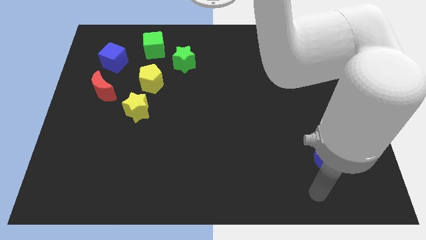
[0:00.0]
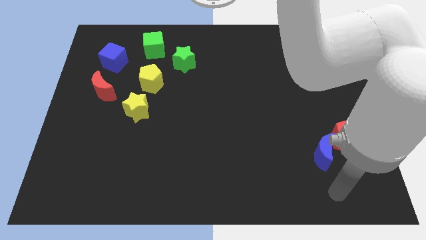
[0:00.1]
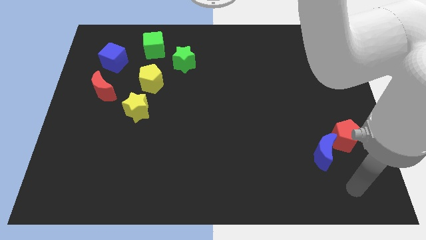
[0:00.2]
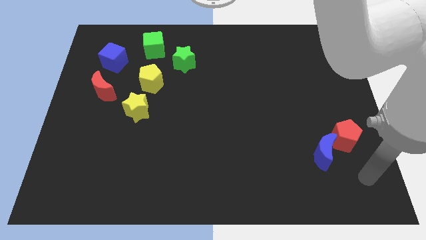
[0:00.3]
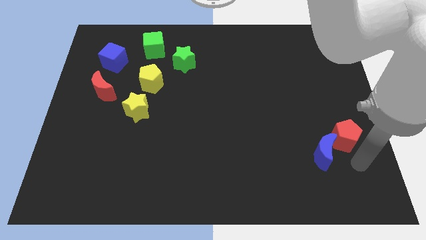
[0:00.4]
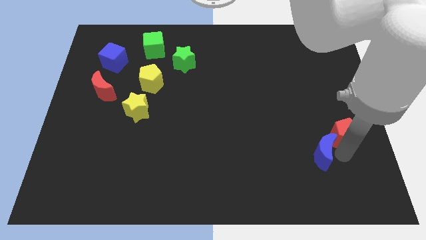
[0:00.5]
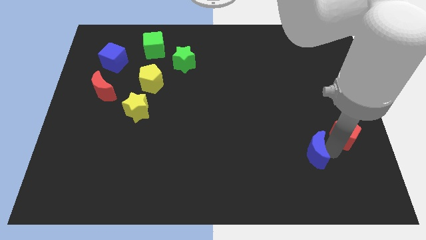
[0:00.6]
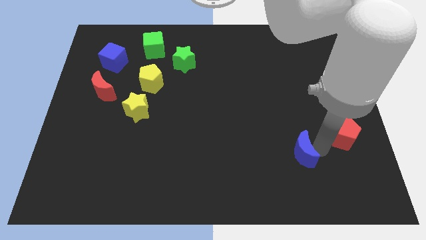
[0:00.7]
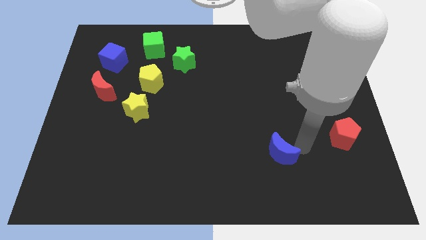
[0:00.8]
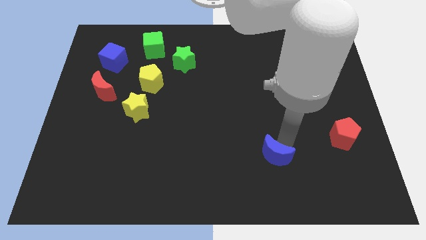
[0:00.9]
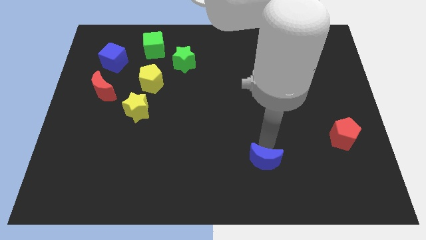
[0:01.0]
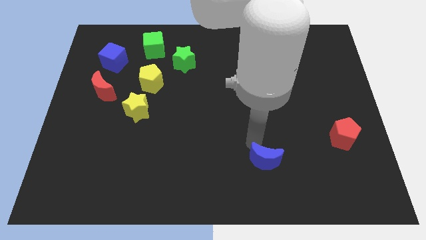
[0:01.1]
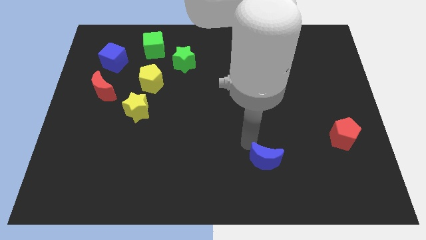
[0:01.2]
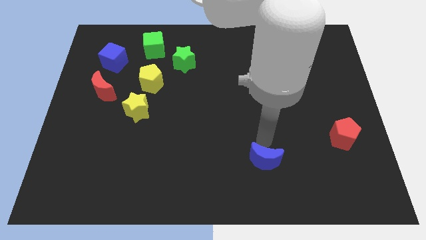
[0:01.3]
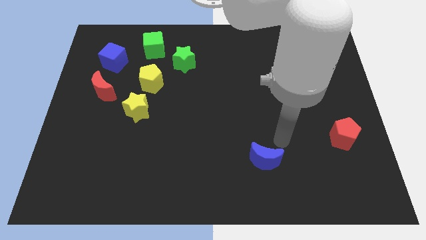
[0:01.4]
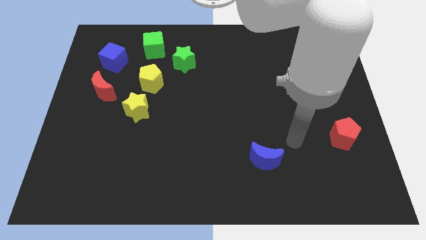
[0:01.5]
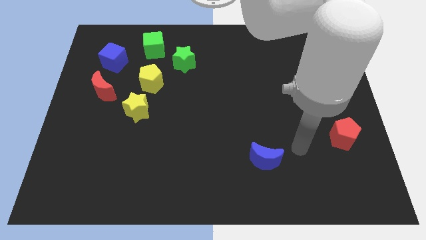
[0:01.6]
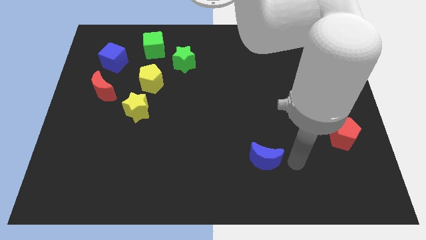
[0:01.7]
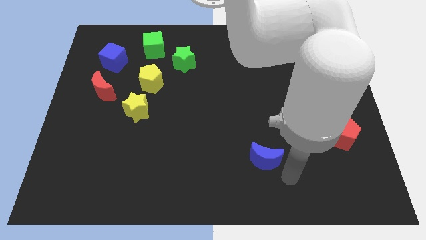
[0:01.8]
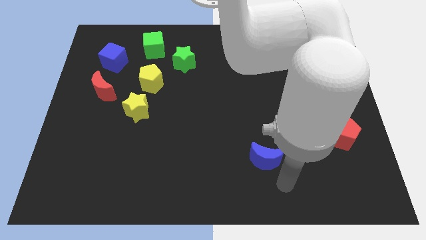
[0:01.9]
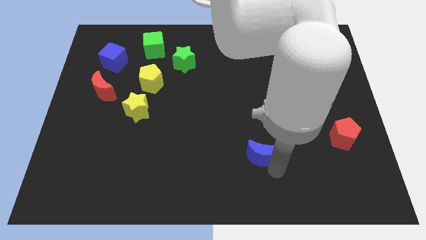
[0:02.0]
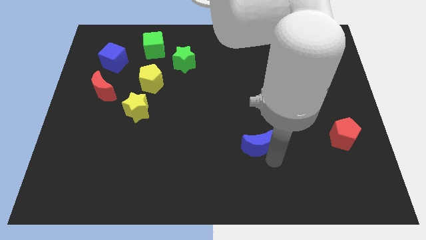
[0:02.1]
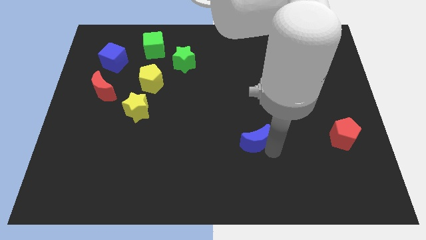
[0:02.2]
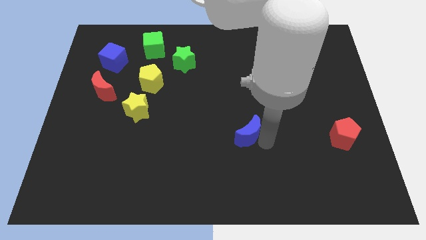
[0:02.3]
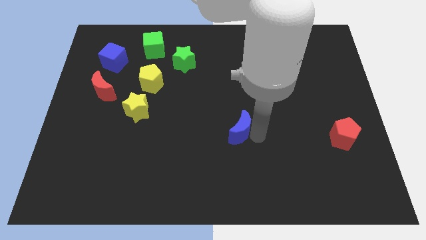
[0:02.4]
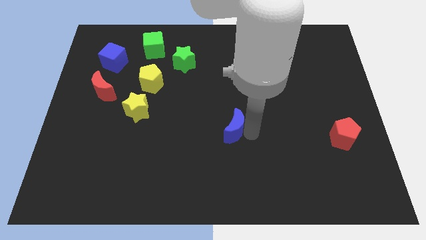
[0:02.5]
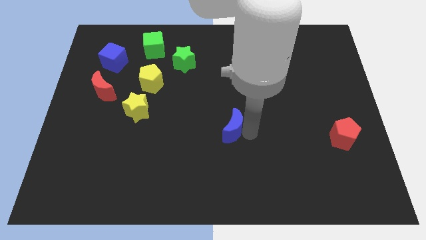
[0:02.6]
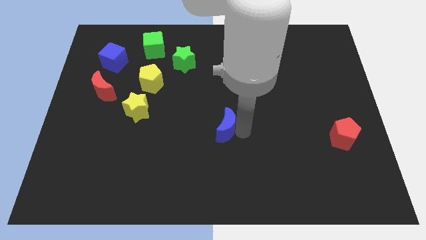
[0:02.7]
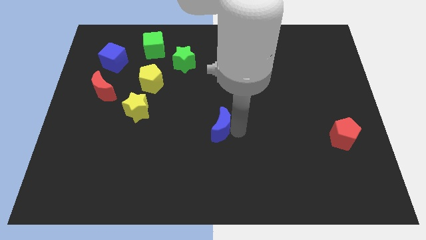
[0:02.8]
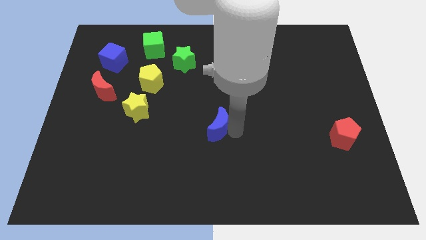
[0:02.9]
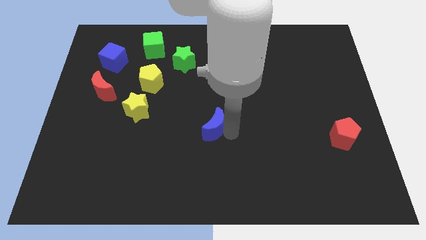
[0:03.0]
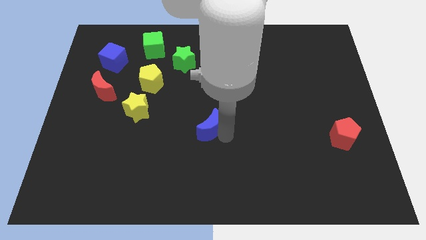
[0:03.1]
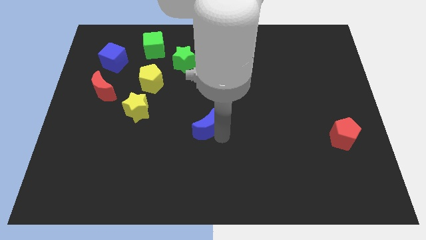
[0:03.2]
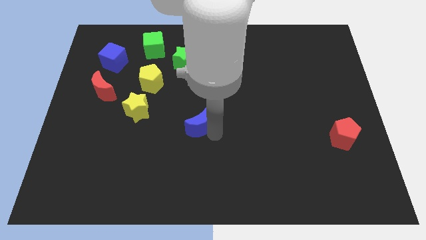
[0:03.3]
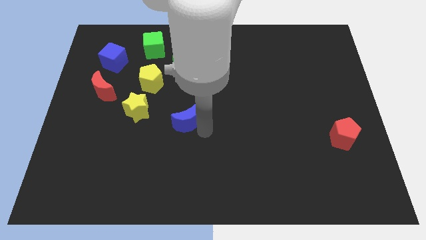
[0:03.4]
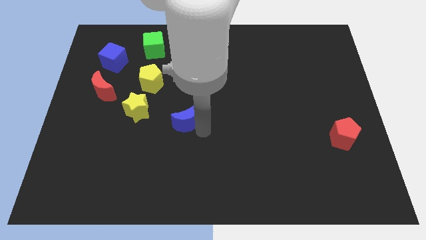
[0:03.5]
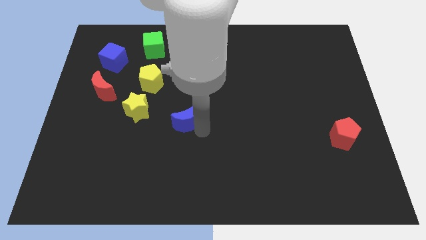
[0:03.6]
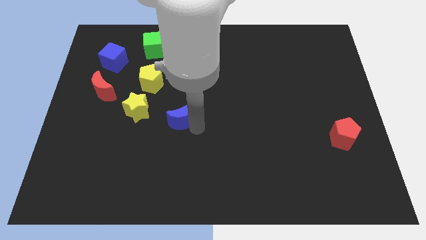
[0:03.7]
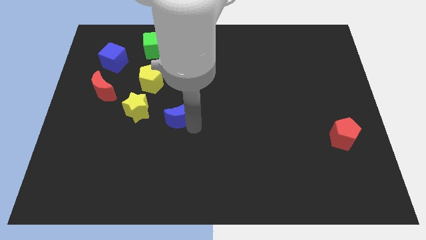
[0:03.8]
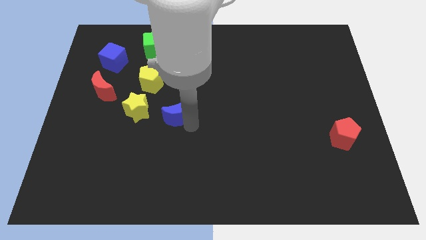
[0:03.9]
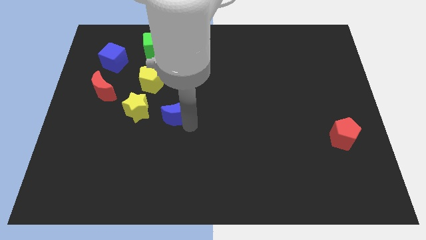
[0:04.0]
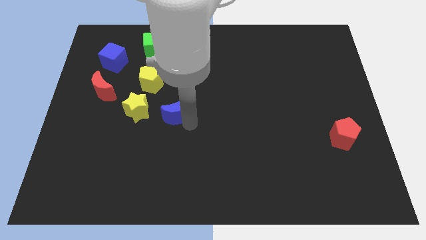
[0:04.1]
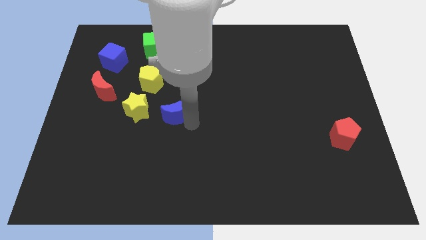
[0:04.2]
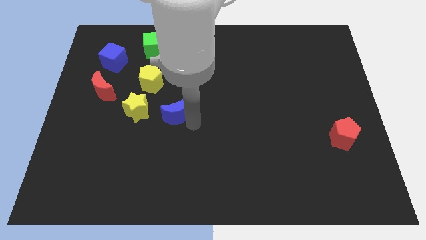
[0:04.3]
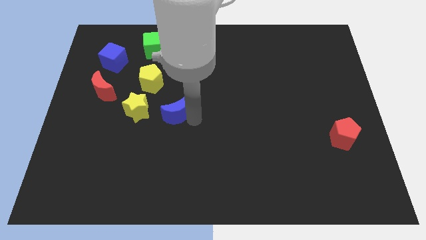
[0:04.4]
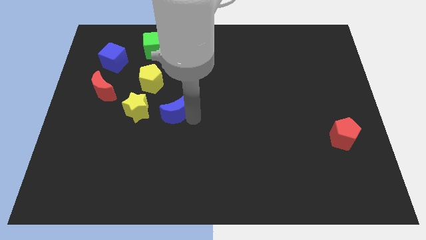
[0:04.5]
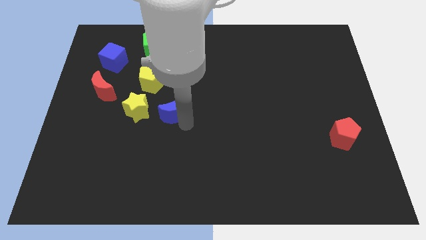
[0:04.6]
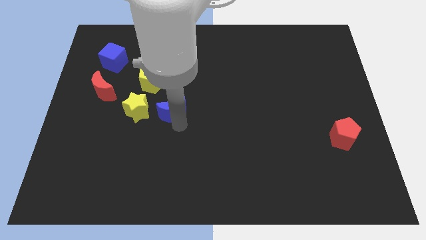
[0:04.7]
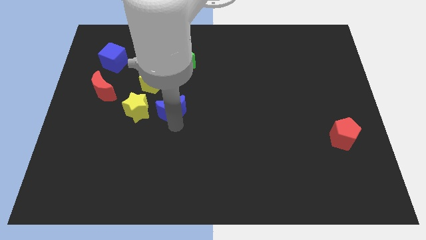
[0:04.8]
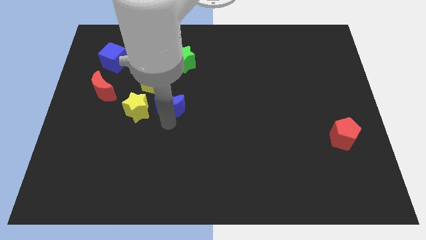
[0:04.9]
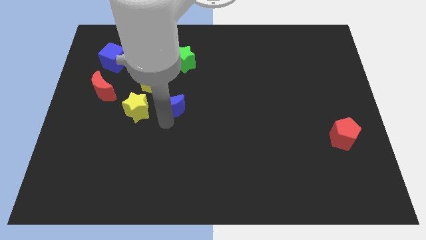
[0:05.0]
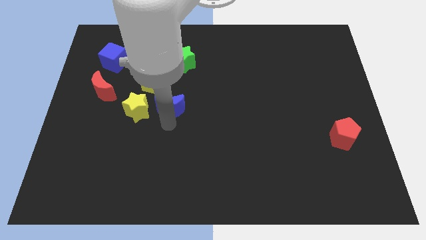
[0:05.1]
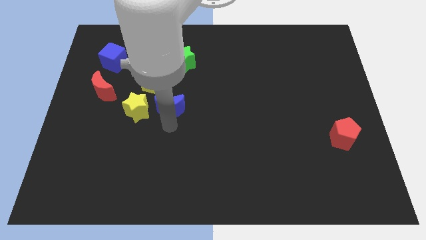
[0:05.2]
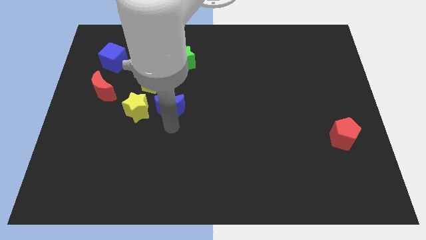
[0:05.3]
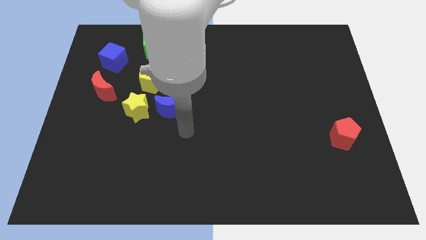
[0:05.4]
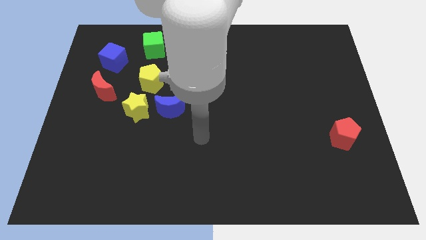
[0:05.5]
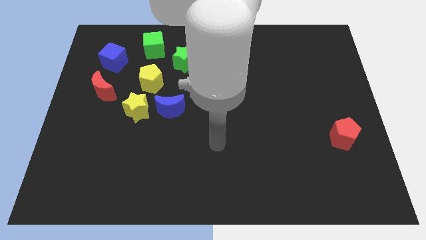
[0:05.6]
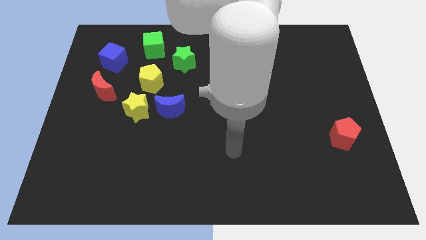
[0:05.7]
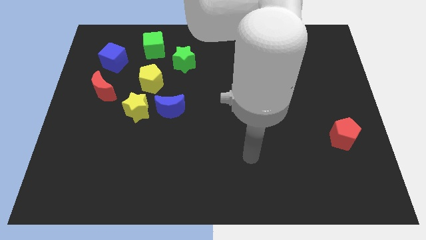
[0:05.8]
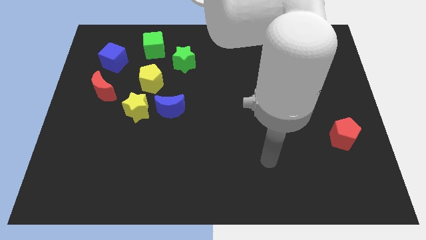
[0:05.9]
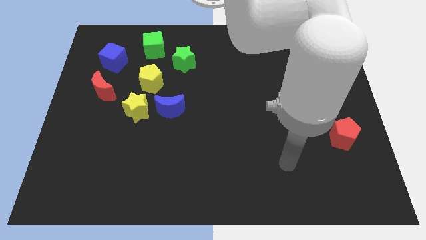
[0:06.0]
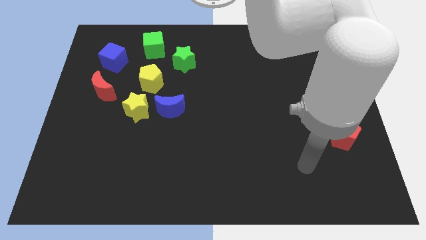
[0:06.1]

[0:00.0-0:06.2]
move blue moon to the right of yellow star

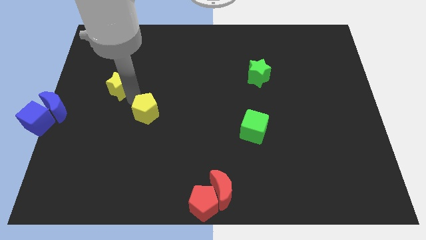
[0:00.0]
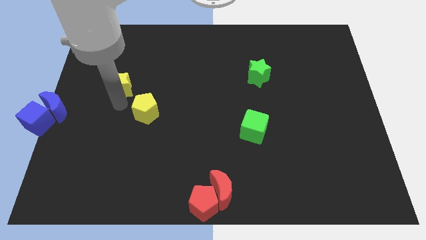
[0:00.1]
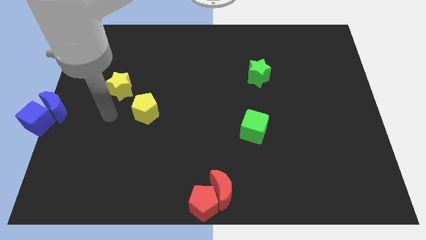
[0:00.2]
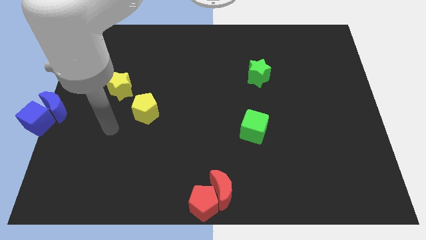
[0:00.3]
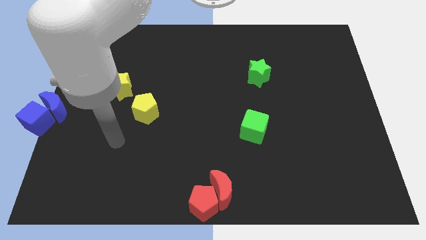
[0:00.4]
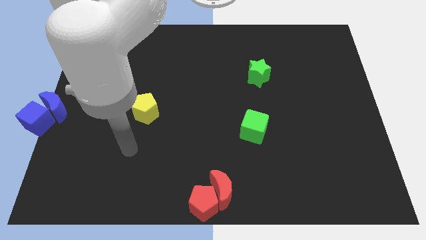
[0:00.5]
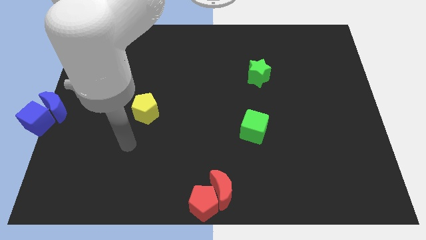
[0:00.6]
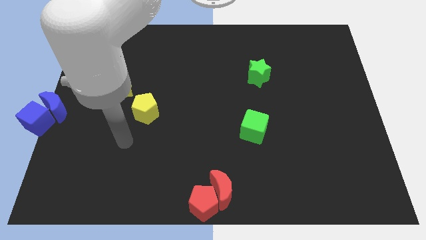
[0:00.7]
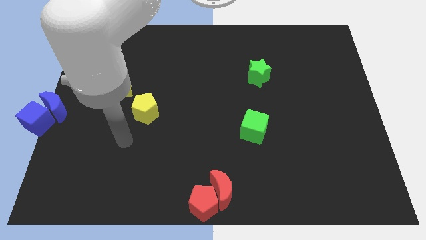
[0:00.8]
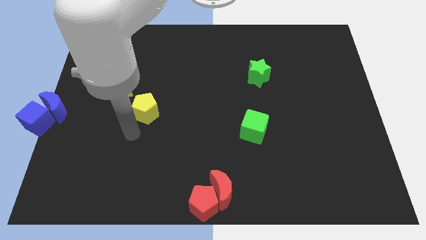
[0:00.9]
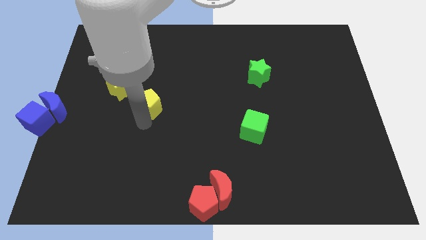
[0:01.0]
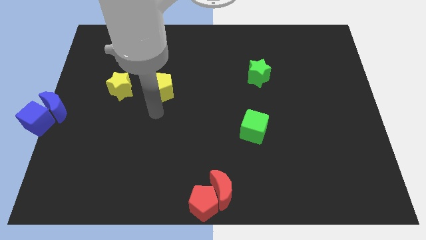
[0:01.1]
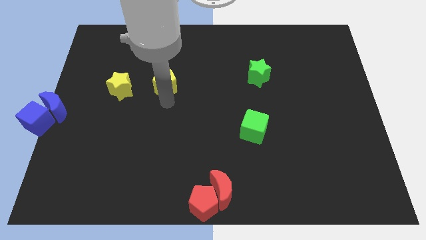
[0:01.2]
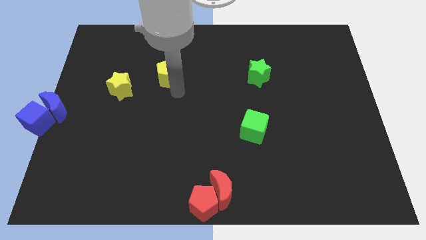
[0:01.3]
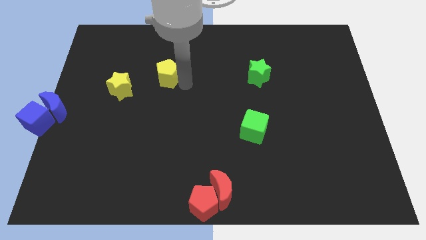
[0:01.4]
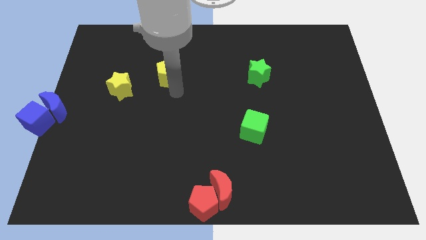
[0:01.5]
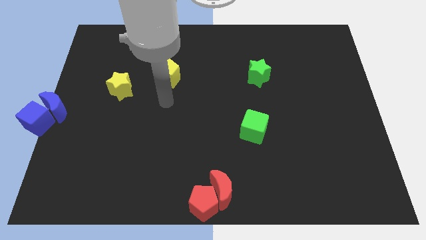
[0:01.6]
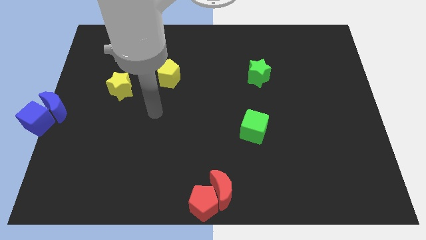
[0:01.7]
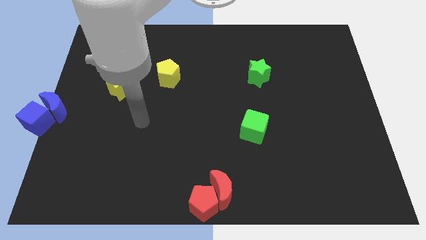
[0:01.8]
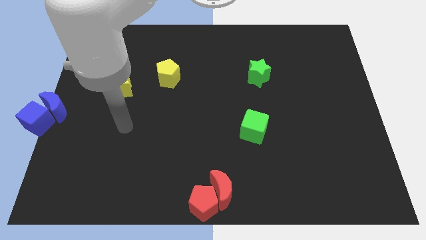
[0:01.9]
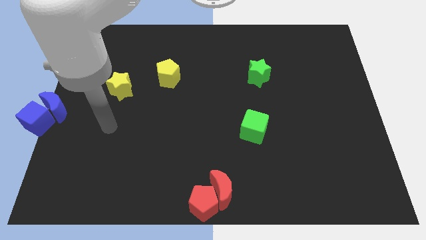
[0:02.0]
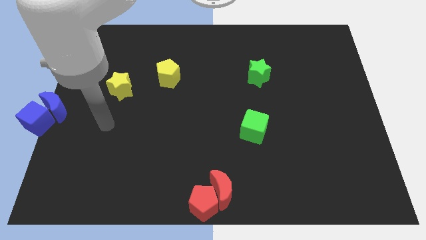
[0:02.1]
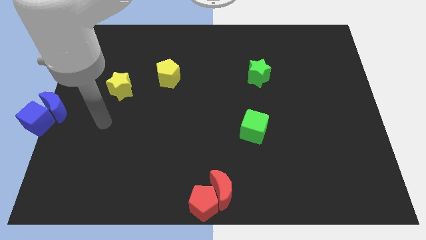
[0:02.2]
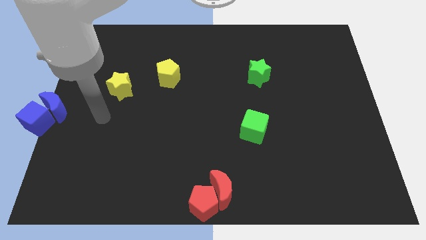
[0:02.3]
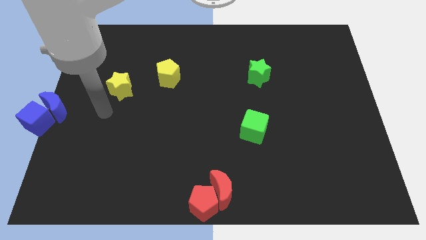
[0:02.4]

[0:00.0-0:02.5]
push the yellow pentagon to the top right of the yellow star

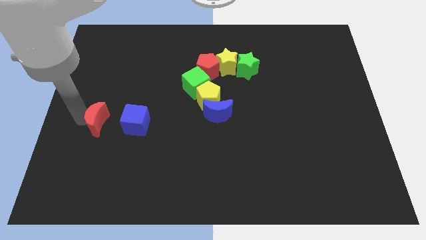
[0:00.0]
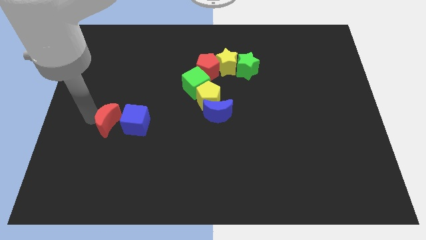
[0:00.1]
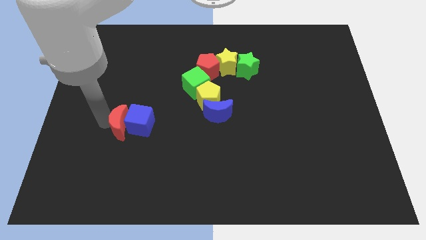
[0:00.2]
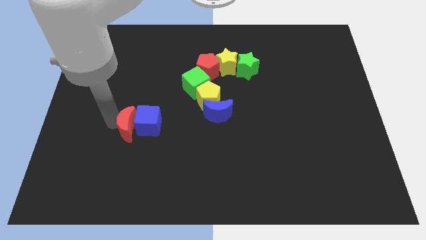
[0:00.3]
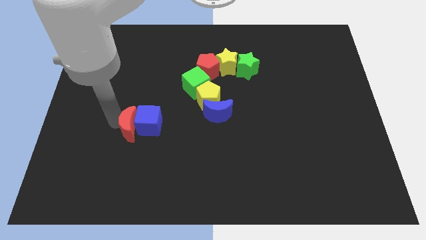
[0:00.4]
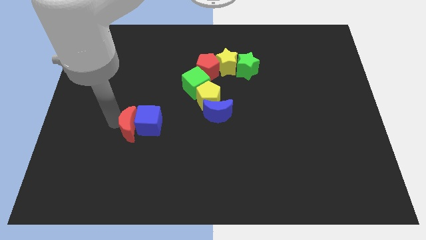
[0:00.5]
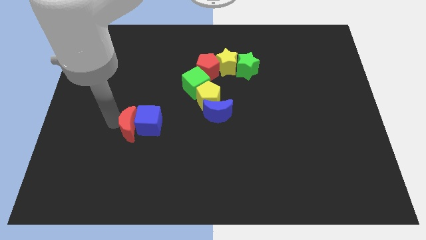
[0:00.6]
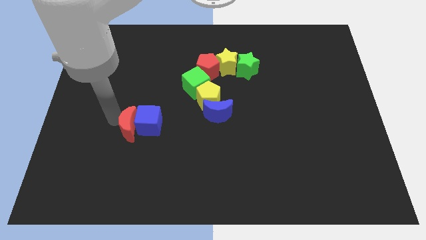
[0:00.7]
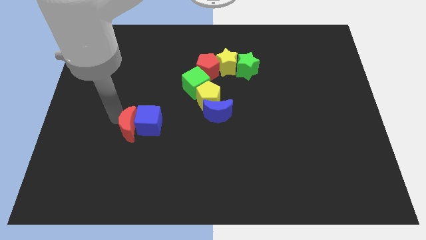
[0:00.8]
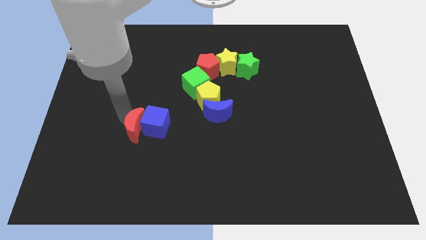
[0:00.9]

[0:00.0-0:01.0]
move the red crescent to the left side of the blue cube
